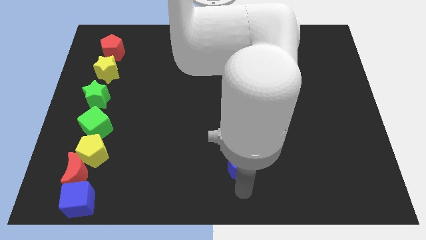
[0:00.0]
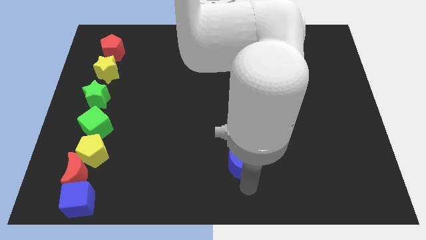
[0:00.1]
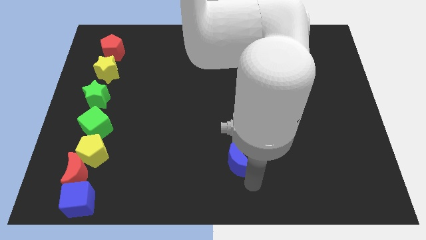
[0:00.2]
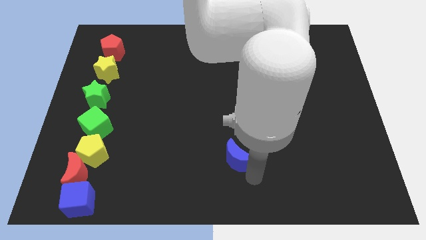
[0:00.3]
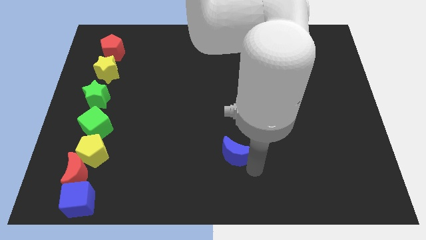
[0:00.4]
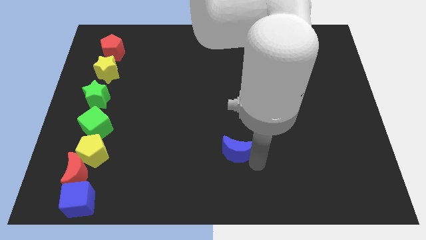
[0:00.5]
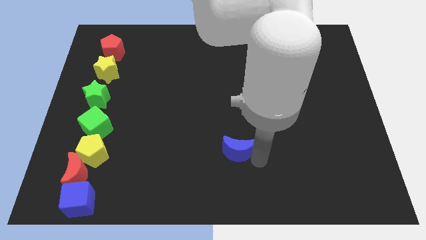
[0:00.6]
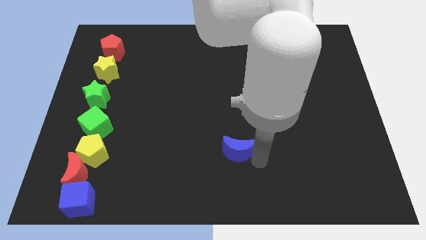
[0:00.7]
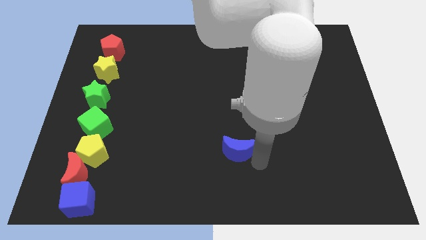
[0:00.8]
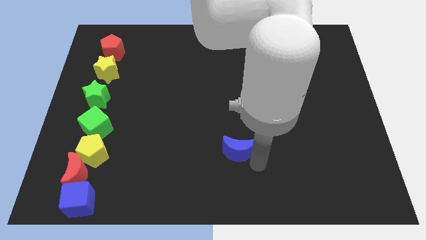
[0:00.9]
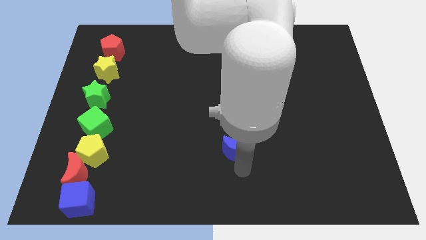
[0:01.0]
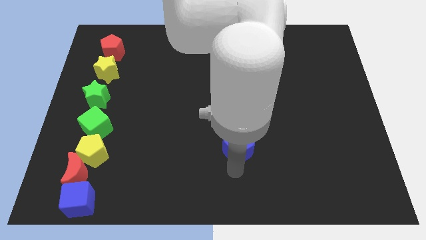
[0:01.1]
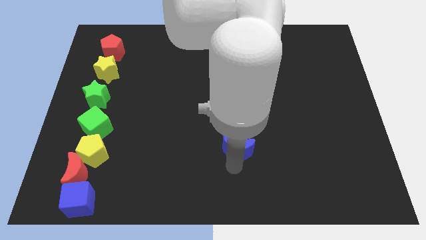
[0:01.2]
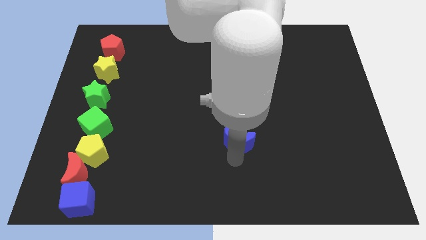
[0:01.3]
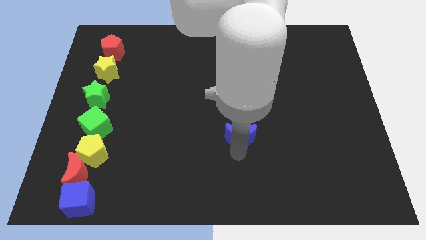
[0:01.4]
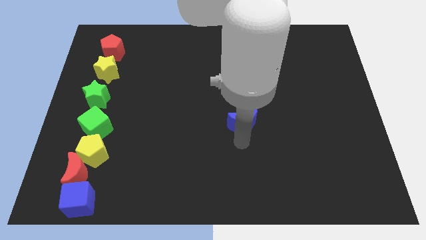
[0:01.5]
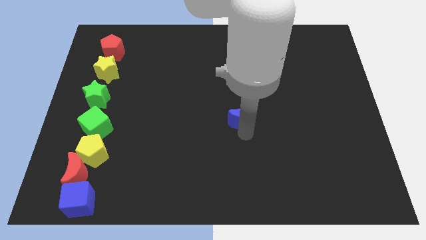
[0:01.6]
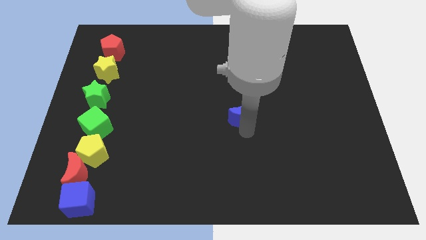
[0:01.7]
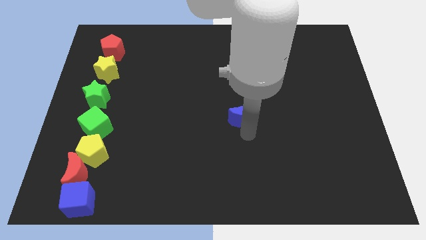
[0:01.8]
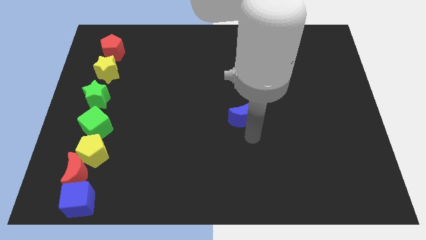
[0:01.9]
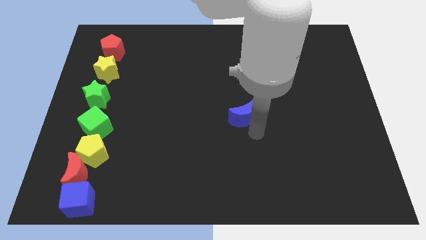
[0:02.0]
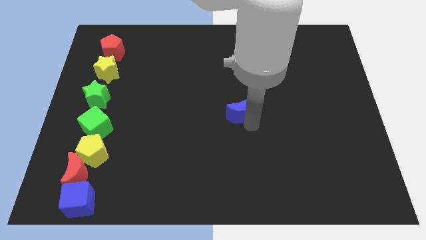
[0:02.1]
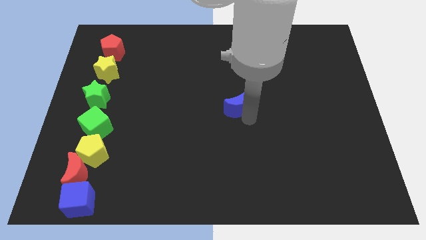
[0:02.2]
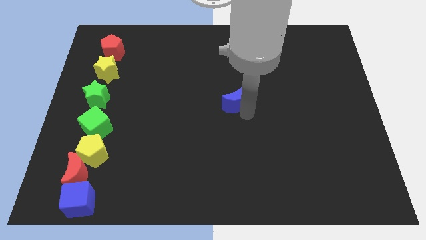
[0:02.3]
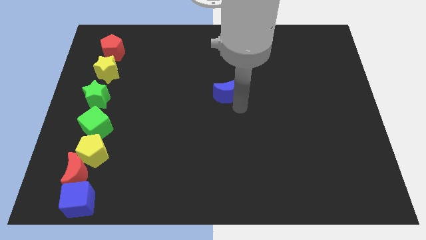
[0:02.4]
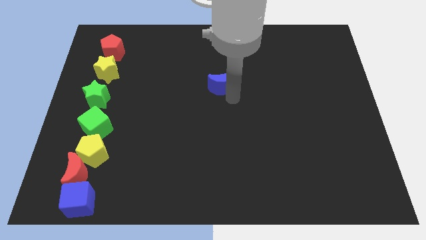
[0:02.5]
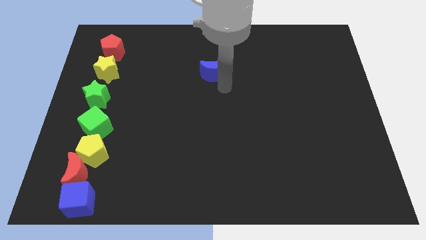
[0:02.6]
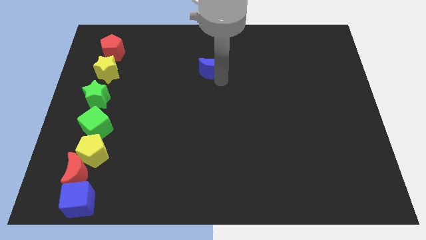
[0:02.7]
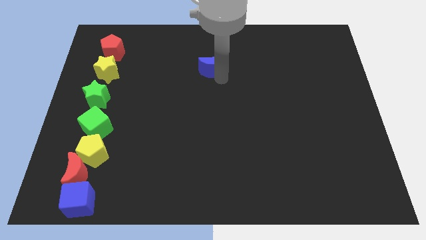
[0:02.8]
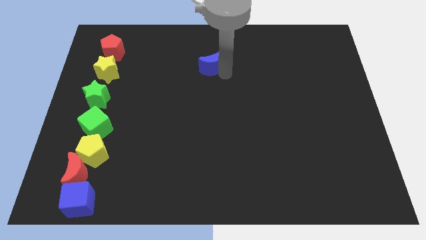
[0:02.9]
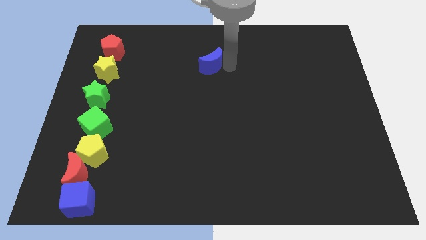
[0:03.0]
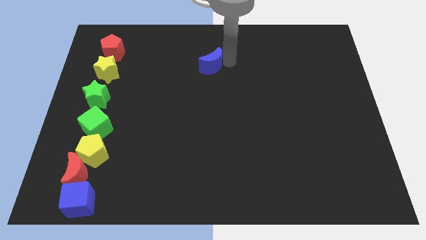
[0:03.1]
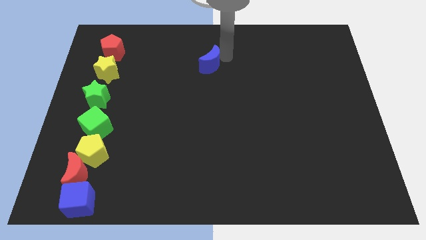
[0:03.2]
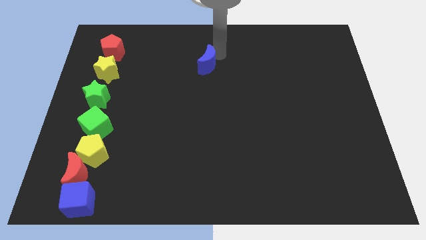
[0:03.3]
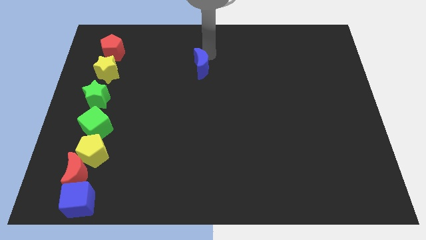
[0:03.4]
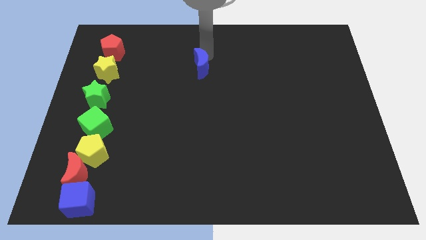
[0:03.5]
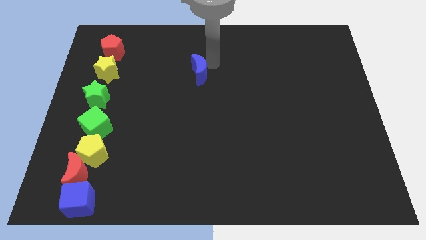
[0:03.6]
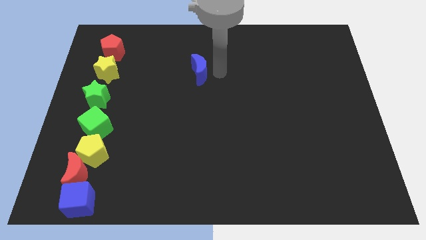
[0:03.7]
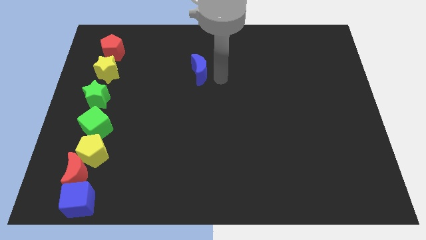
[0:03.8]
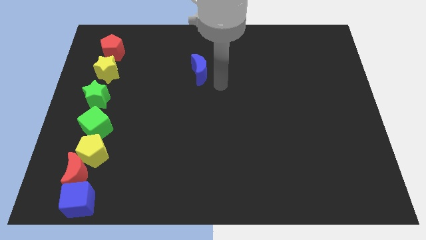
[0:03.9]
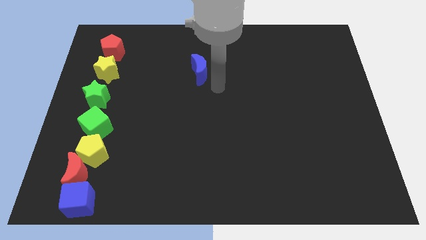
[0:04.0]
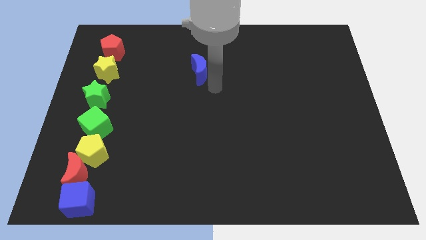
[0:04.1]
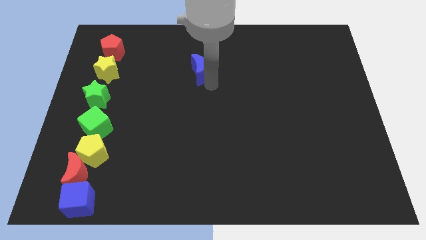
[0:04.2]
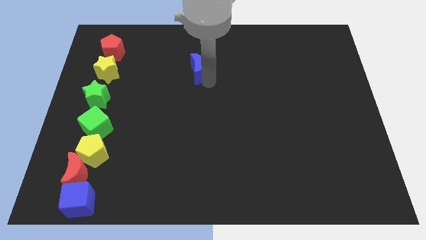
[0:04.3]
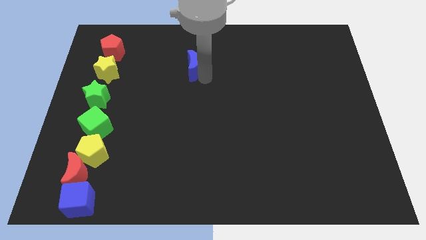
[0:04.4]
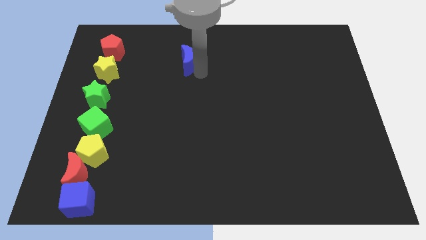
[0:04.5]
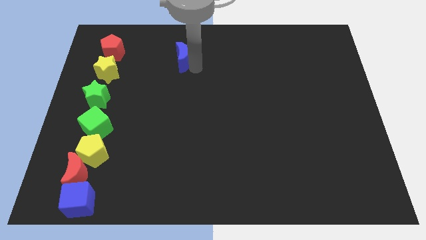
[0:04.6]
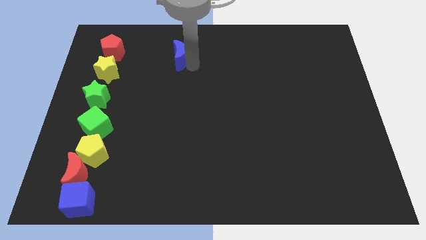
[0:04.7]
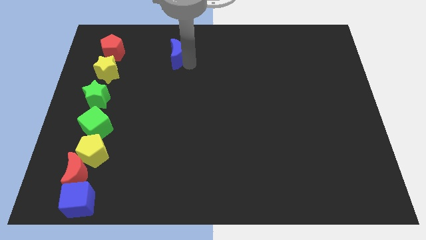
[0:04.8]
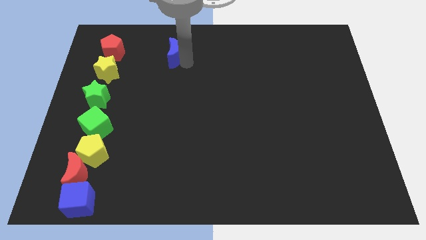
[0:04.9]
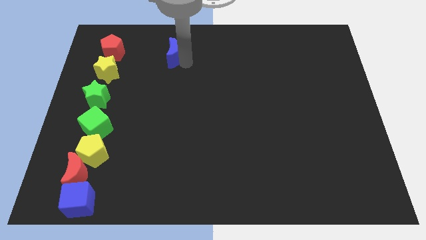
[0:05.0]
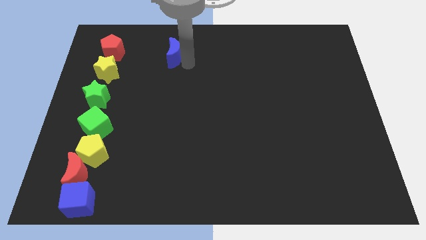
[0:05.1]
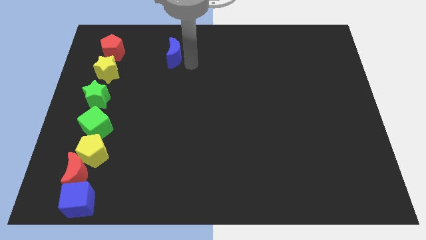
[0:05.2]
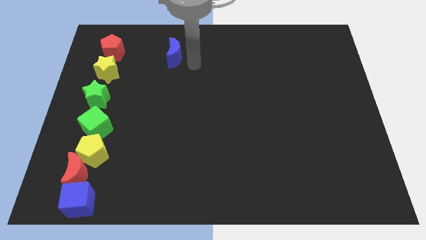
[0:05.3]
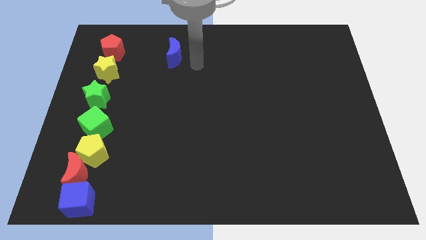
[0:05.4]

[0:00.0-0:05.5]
push the blue moon towards the top of the board

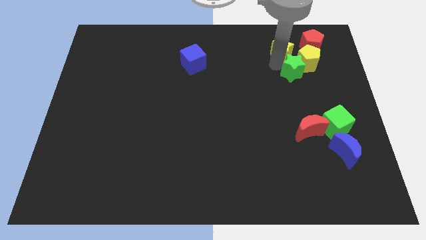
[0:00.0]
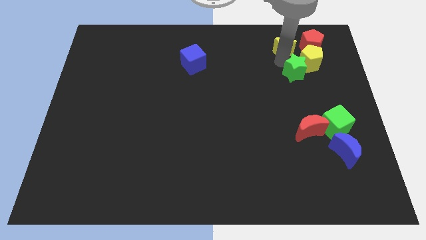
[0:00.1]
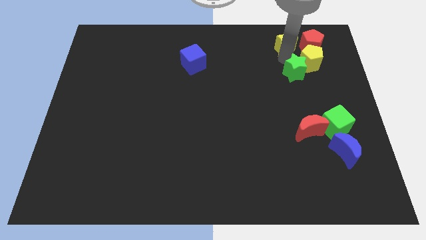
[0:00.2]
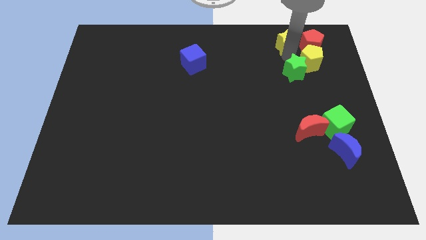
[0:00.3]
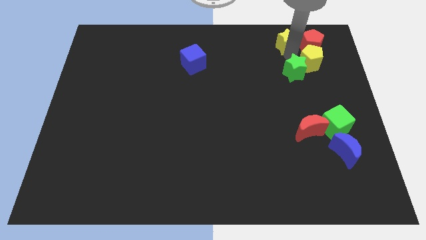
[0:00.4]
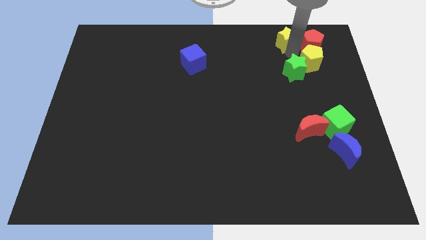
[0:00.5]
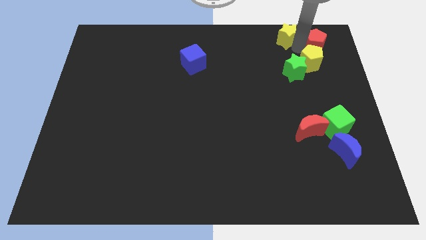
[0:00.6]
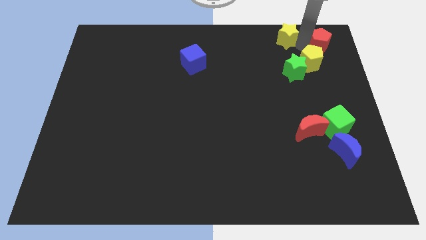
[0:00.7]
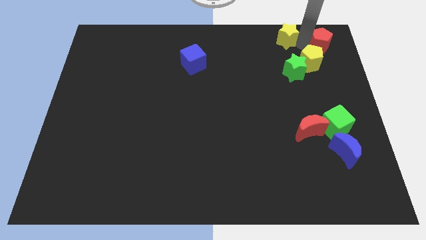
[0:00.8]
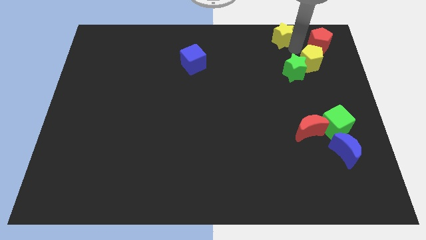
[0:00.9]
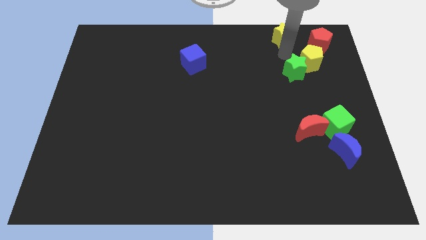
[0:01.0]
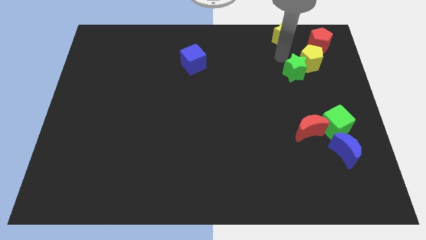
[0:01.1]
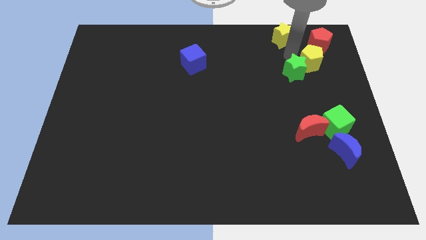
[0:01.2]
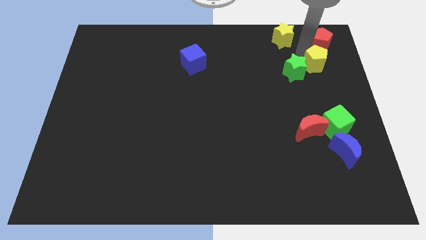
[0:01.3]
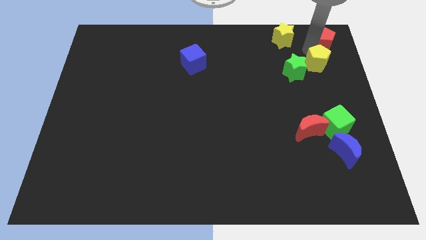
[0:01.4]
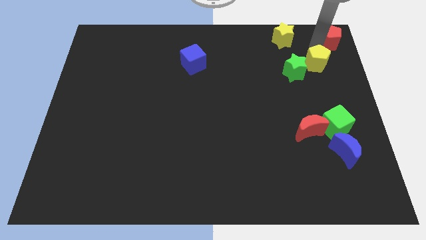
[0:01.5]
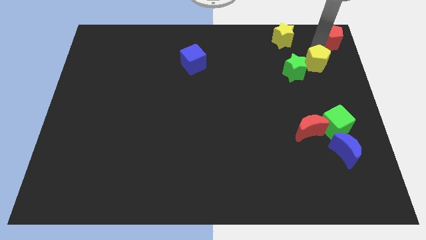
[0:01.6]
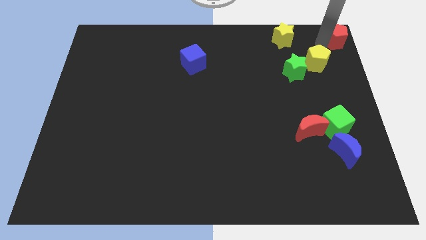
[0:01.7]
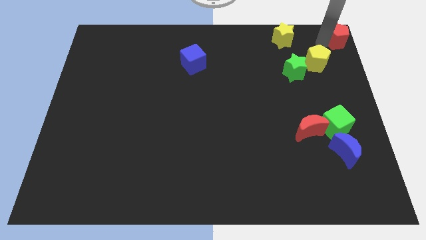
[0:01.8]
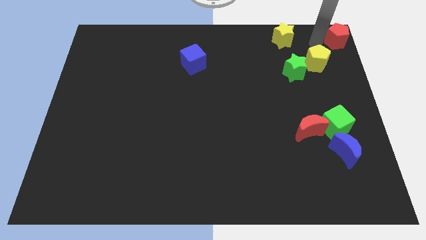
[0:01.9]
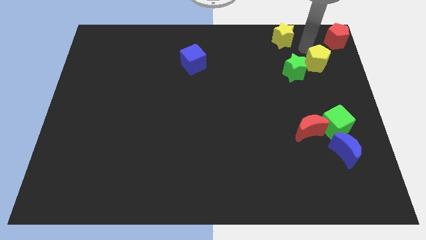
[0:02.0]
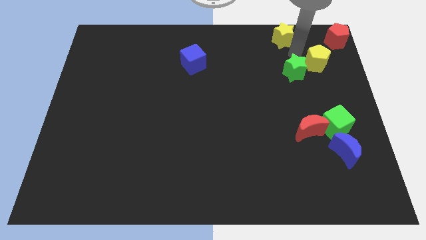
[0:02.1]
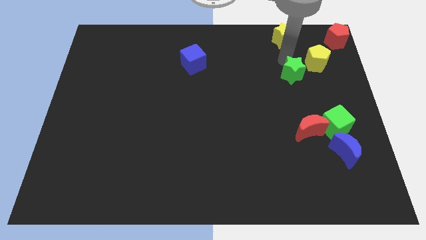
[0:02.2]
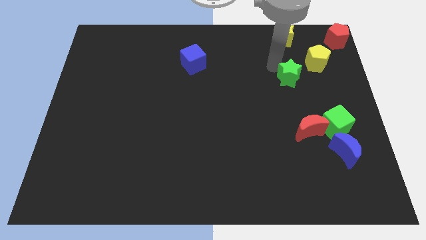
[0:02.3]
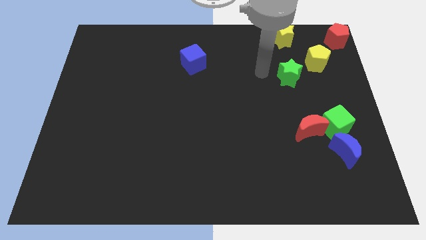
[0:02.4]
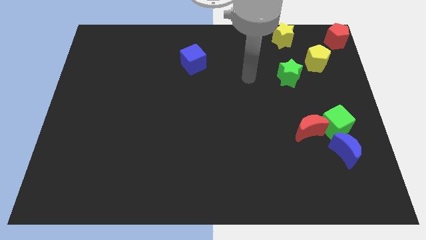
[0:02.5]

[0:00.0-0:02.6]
separate the group of blocks from each other

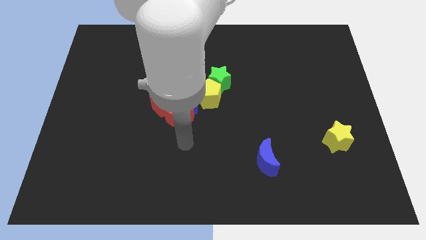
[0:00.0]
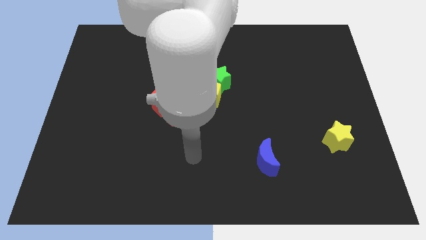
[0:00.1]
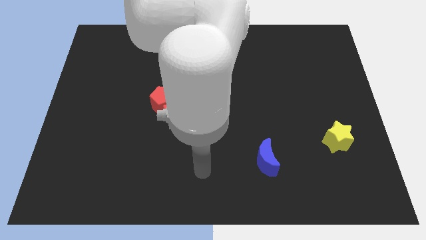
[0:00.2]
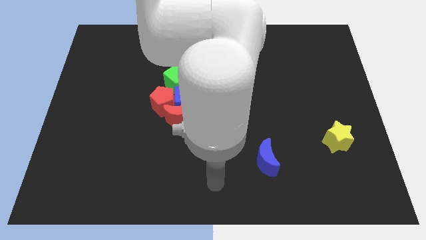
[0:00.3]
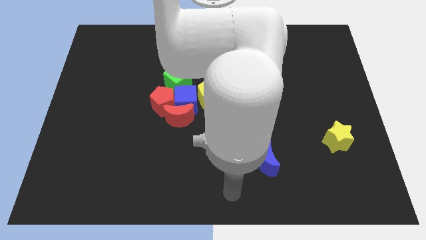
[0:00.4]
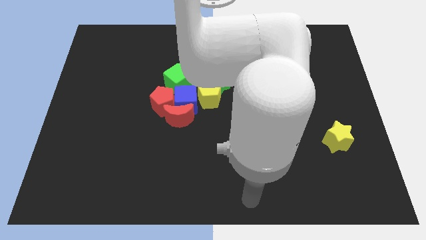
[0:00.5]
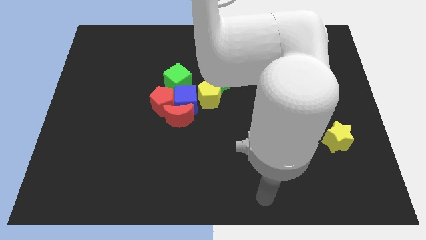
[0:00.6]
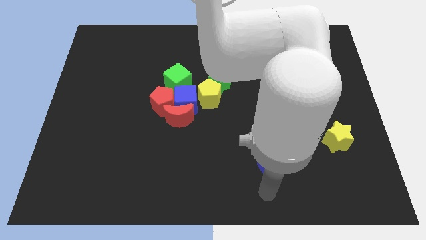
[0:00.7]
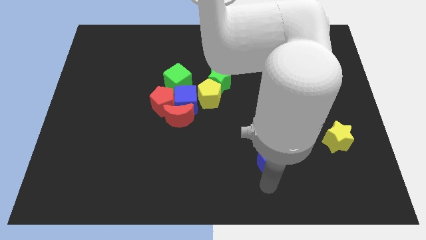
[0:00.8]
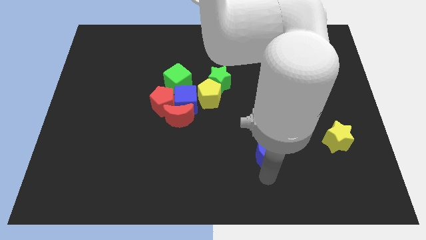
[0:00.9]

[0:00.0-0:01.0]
move your arm to bottom of the blue moon
